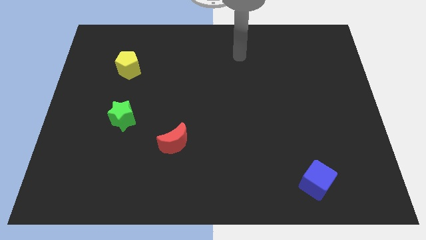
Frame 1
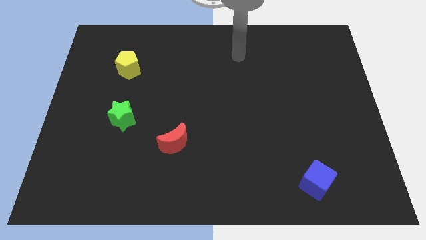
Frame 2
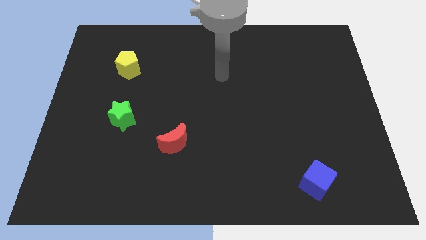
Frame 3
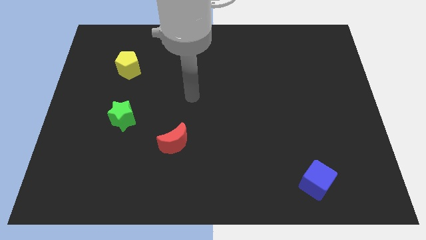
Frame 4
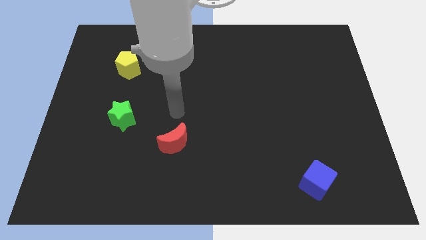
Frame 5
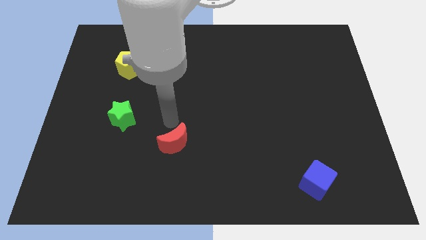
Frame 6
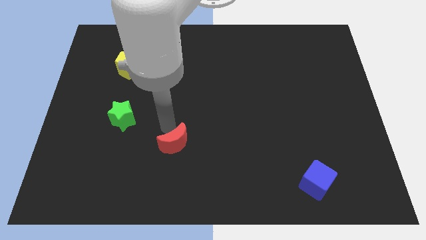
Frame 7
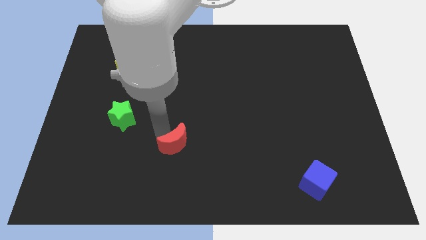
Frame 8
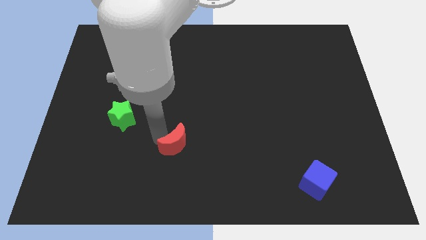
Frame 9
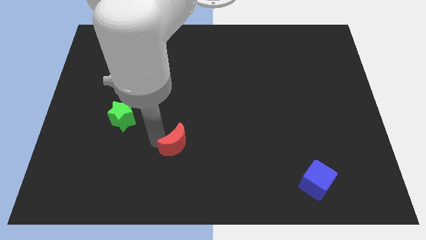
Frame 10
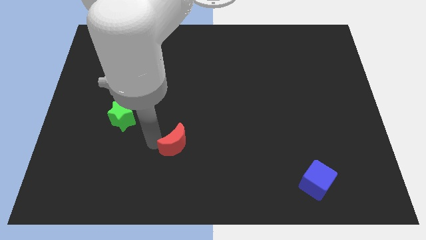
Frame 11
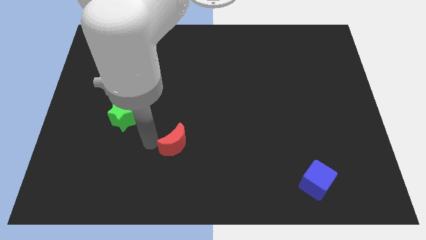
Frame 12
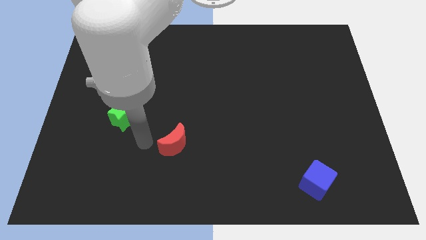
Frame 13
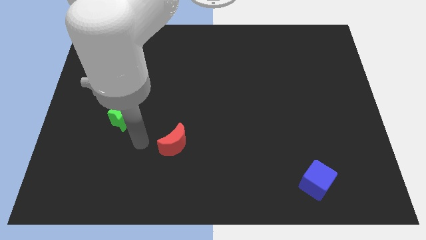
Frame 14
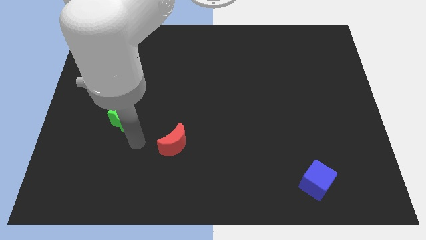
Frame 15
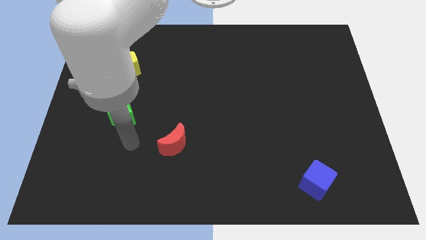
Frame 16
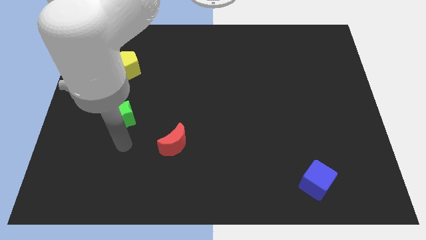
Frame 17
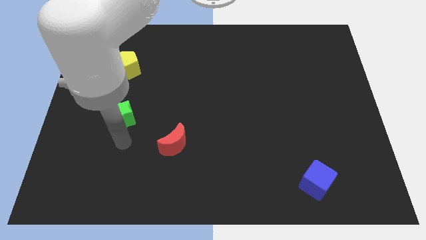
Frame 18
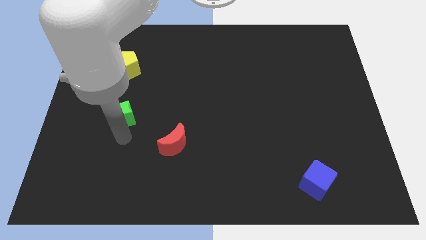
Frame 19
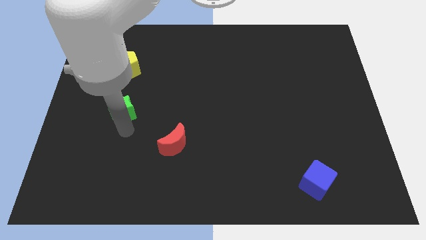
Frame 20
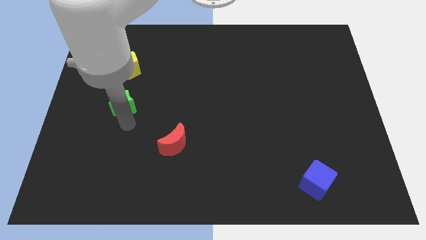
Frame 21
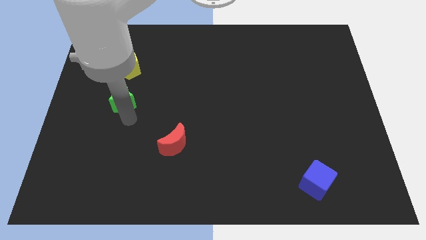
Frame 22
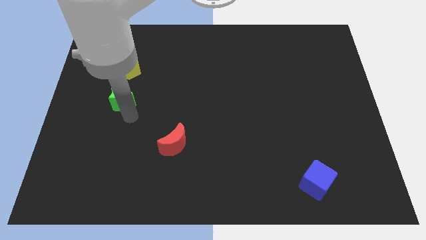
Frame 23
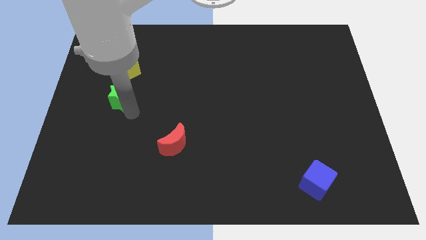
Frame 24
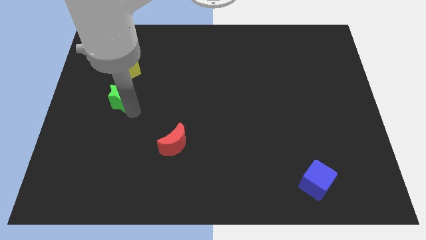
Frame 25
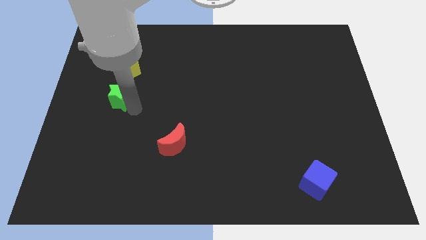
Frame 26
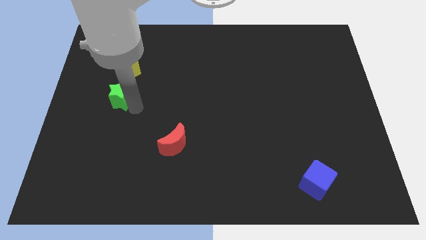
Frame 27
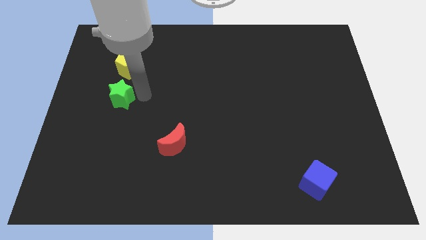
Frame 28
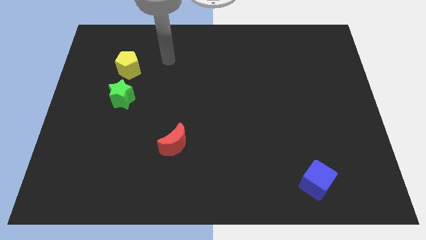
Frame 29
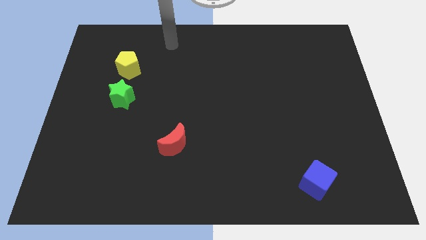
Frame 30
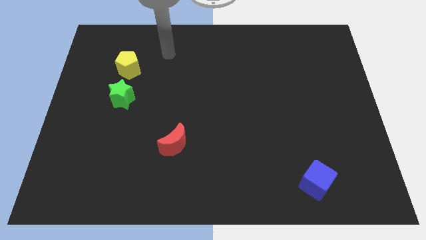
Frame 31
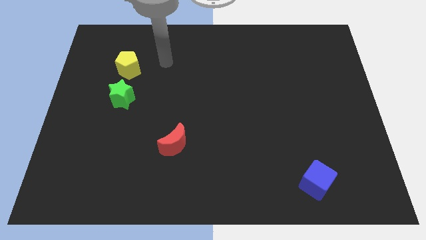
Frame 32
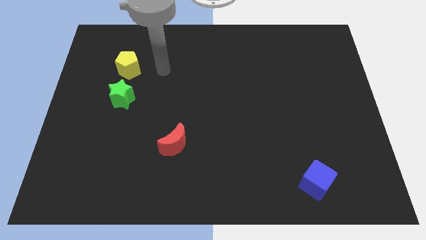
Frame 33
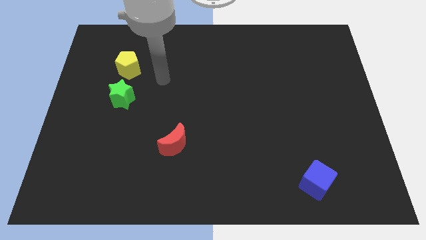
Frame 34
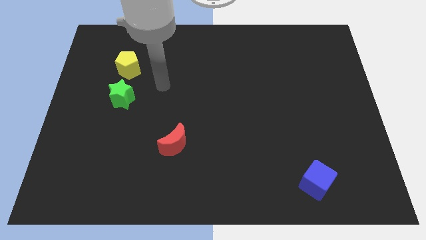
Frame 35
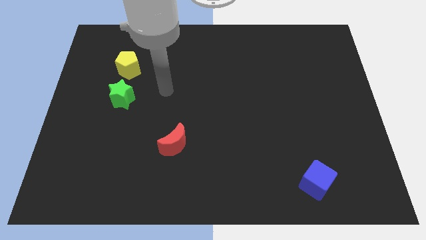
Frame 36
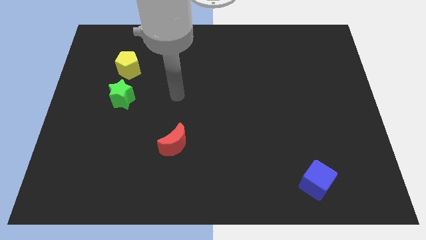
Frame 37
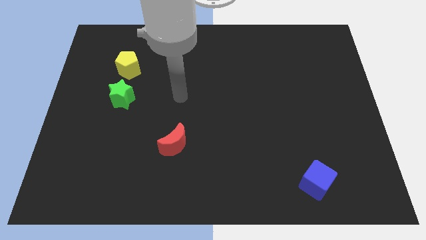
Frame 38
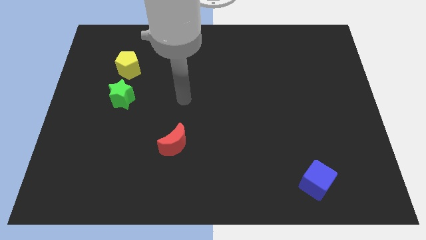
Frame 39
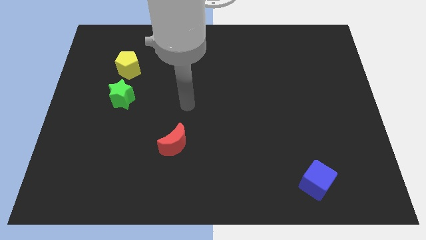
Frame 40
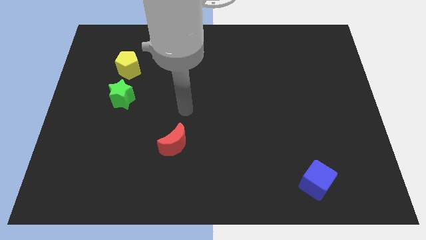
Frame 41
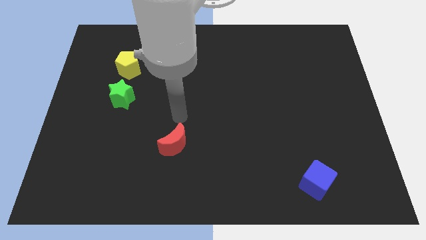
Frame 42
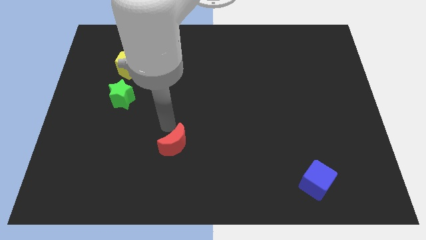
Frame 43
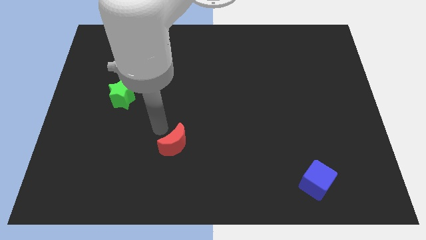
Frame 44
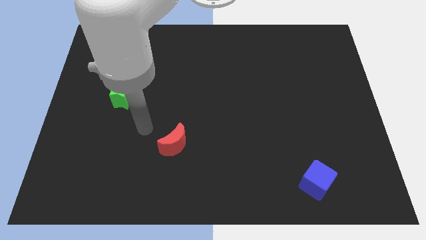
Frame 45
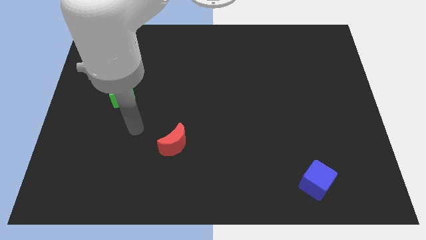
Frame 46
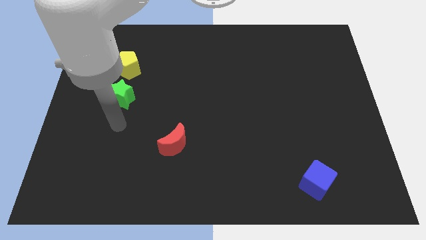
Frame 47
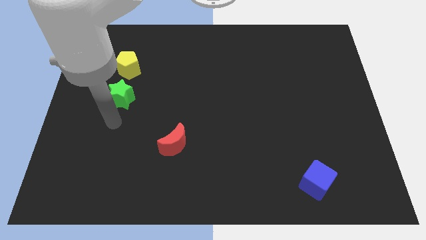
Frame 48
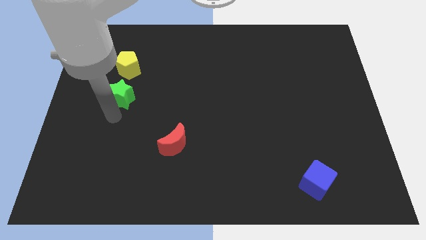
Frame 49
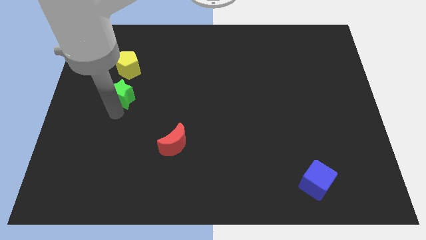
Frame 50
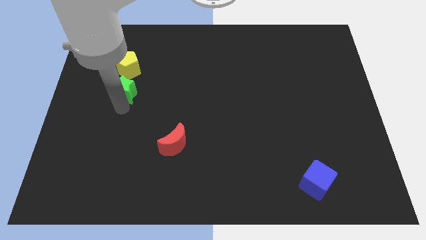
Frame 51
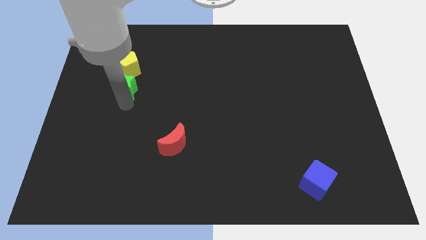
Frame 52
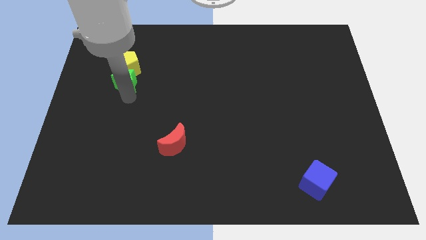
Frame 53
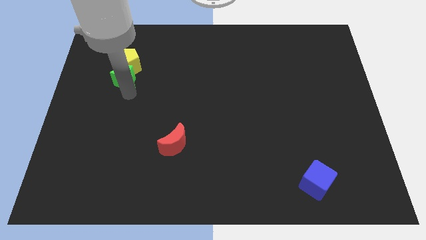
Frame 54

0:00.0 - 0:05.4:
move the green block next to the pentagon

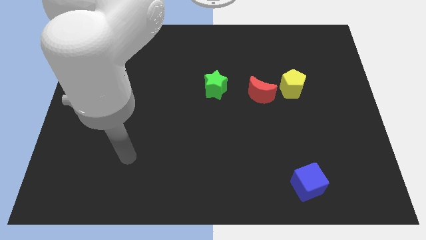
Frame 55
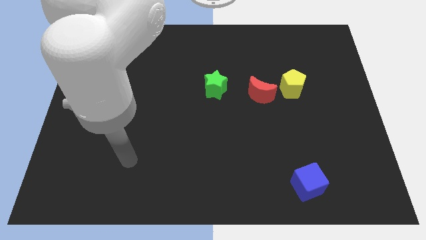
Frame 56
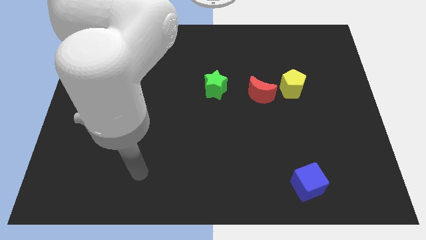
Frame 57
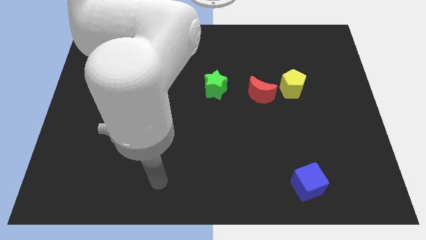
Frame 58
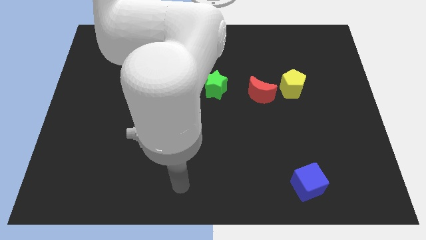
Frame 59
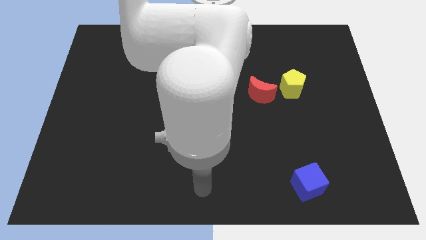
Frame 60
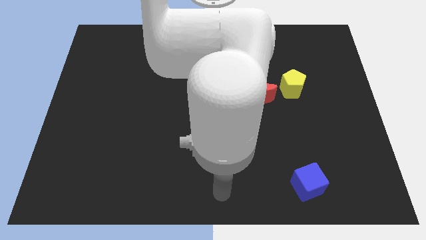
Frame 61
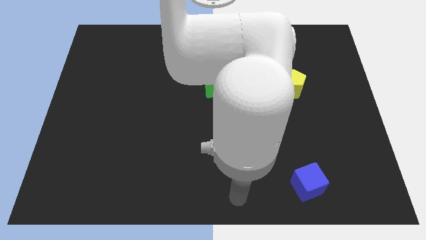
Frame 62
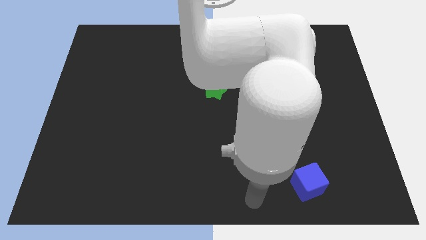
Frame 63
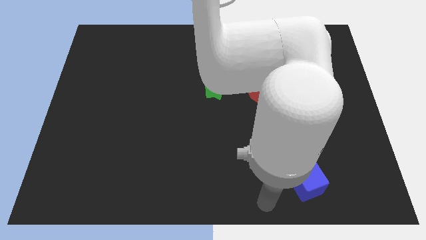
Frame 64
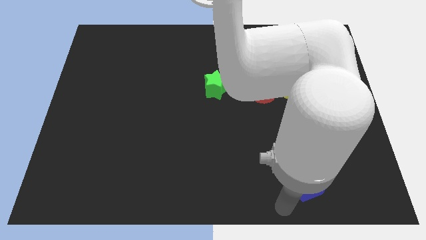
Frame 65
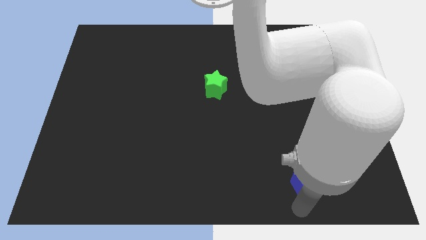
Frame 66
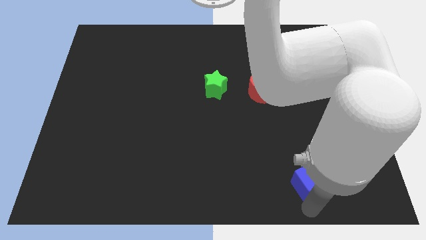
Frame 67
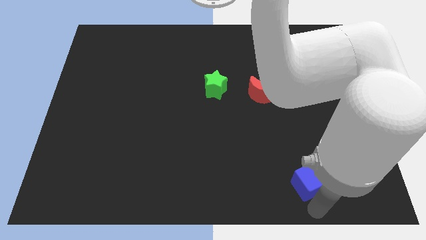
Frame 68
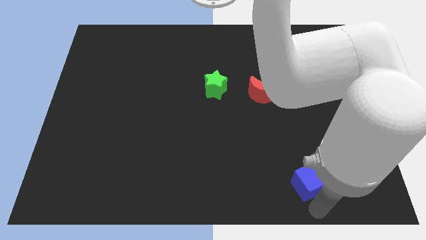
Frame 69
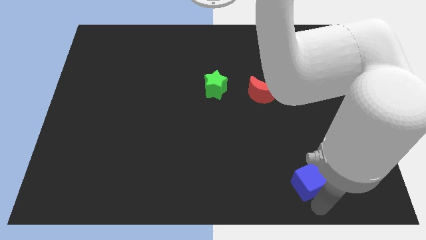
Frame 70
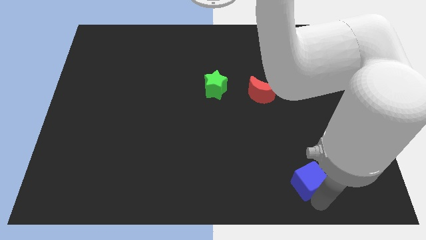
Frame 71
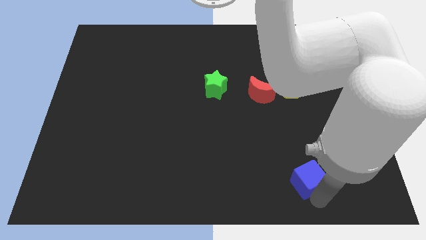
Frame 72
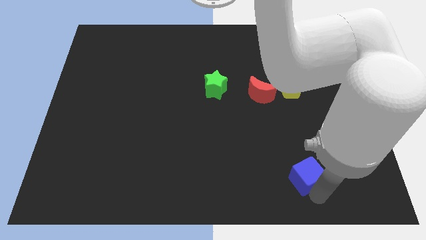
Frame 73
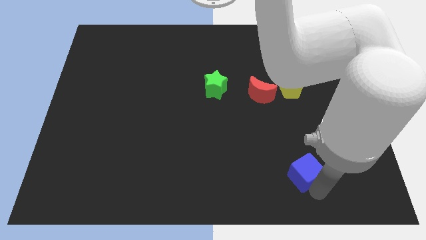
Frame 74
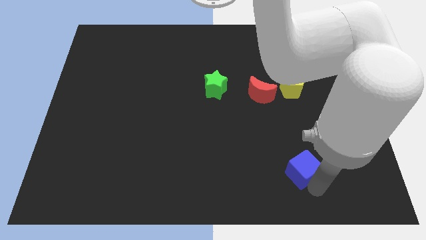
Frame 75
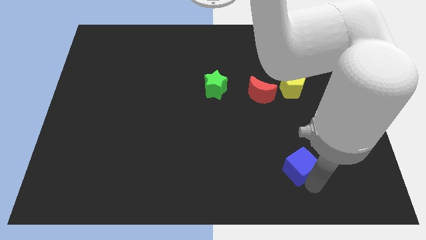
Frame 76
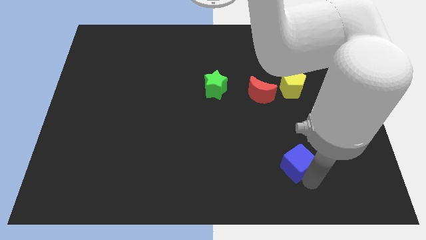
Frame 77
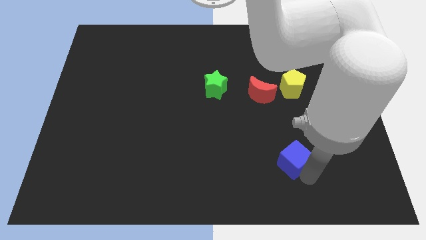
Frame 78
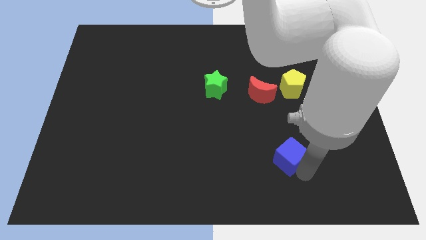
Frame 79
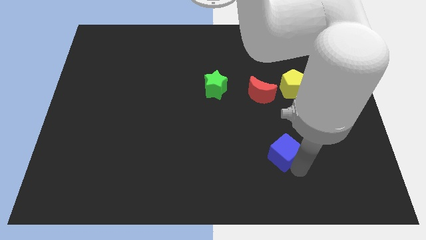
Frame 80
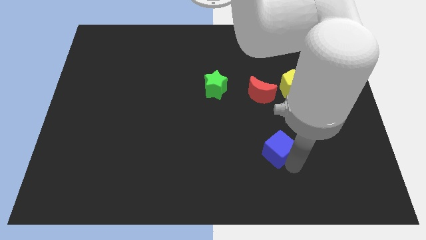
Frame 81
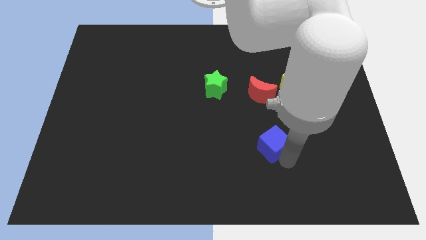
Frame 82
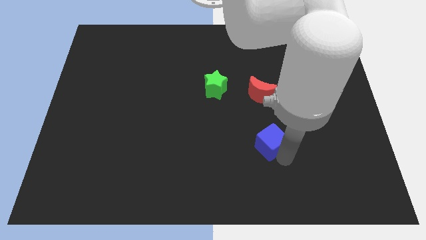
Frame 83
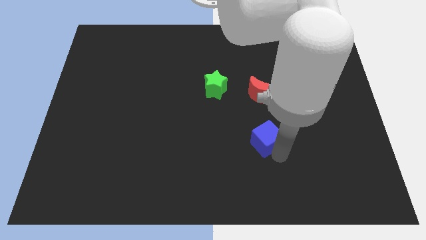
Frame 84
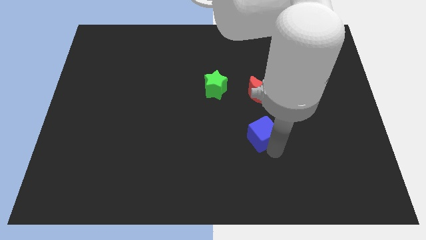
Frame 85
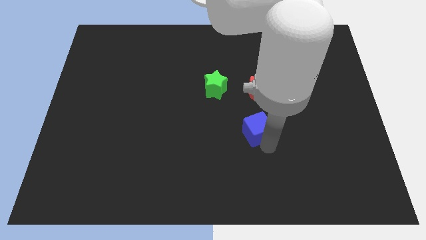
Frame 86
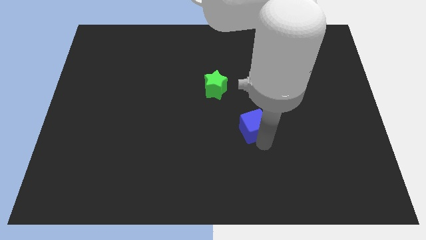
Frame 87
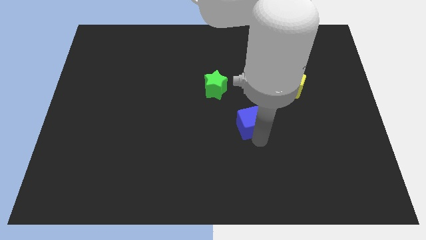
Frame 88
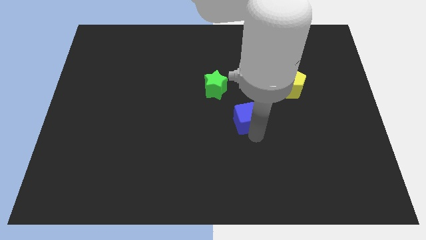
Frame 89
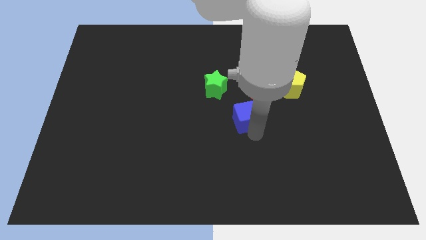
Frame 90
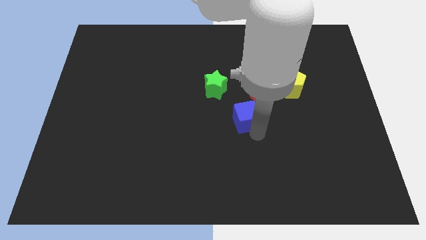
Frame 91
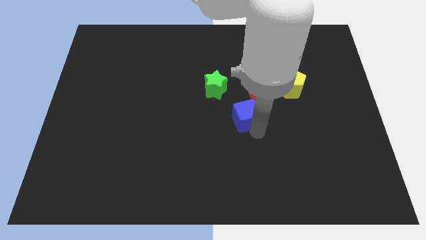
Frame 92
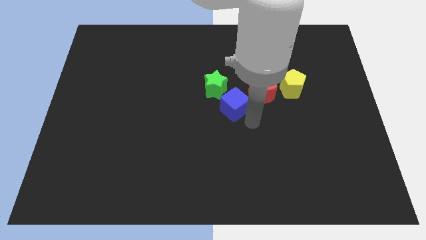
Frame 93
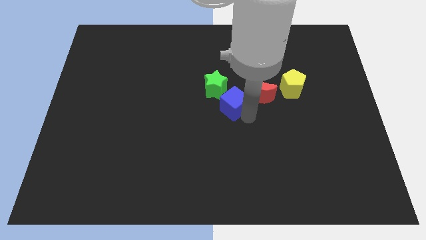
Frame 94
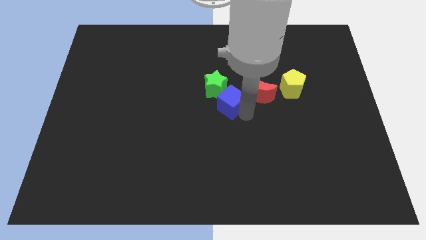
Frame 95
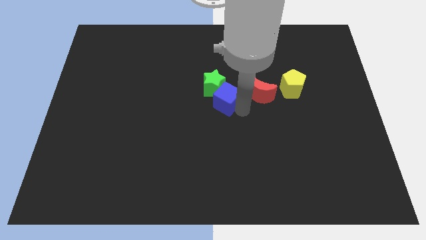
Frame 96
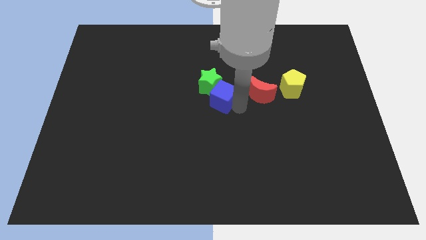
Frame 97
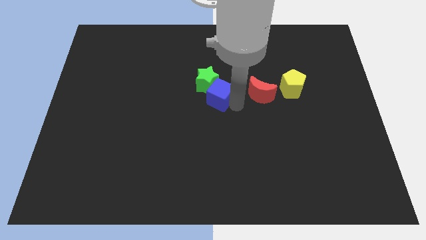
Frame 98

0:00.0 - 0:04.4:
slide the cube close to the green block
